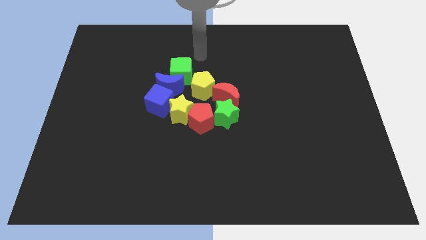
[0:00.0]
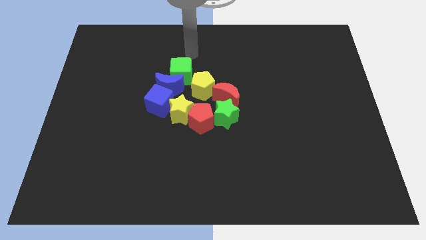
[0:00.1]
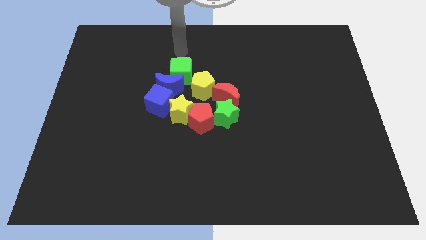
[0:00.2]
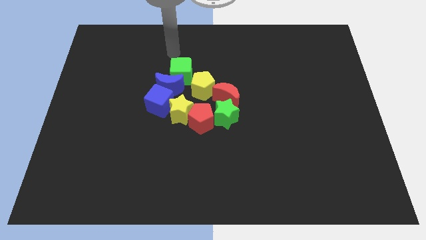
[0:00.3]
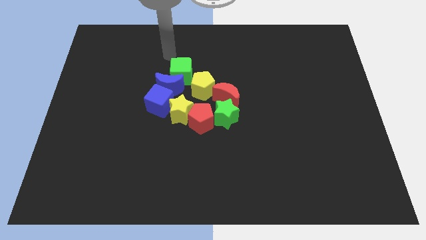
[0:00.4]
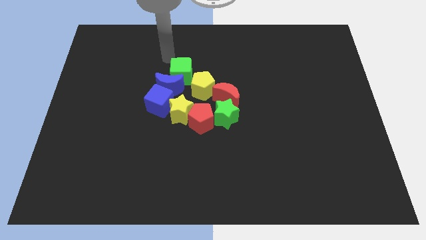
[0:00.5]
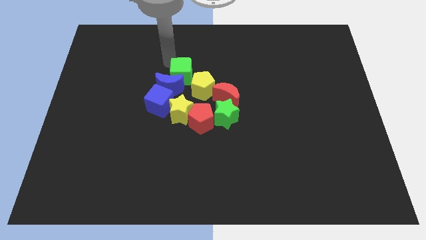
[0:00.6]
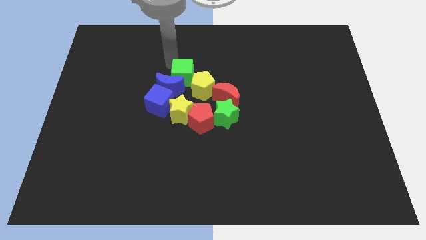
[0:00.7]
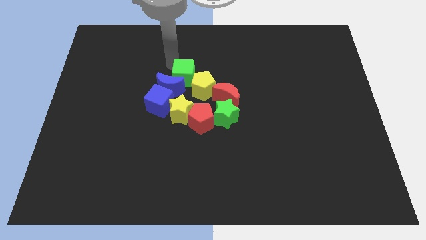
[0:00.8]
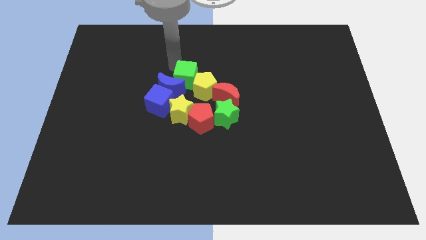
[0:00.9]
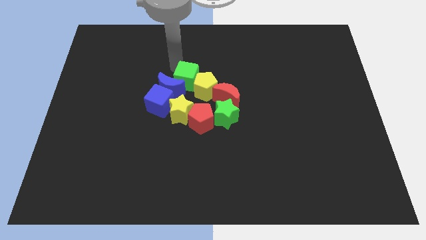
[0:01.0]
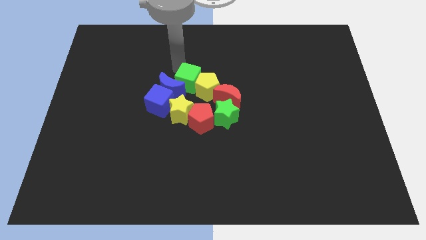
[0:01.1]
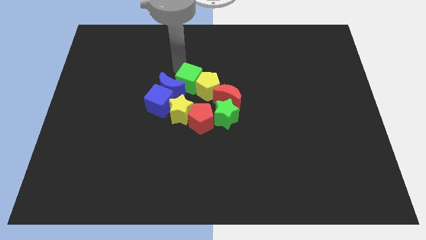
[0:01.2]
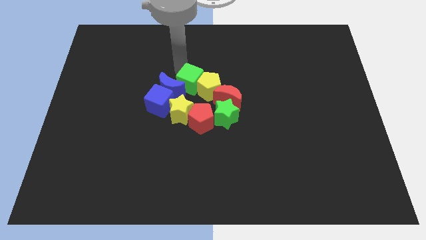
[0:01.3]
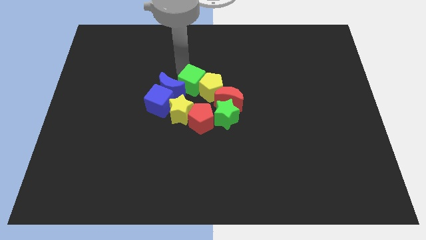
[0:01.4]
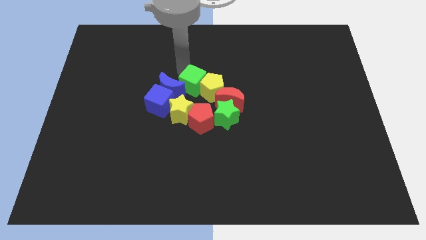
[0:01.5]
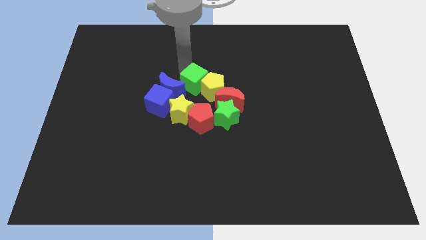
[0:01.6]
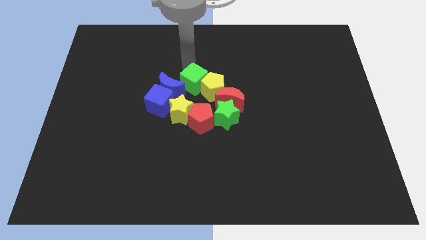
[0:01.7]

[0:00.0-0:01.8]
push the green cube into the group of objects

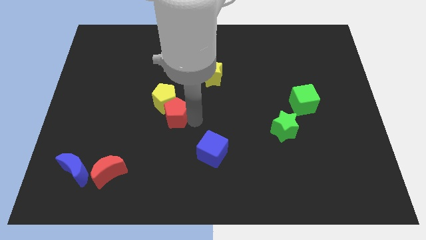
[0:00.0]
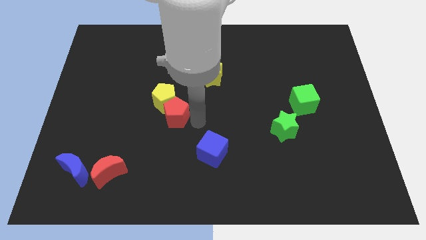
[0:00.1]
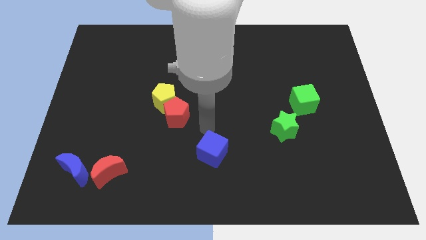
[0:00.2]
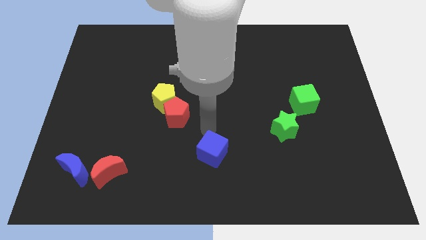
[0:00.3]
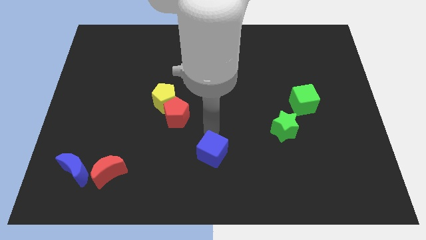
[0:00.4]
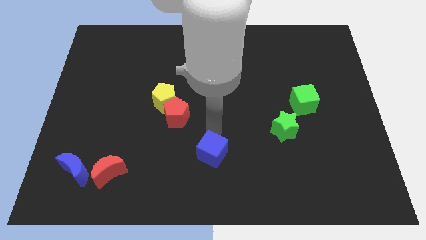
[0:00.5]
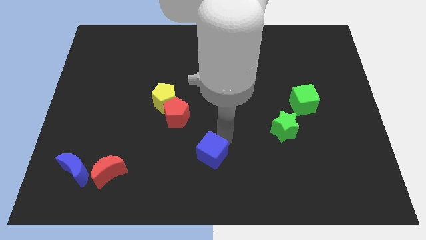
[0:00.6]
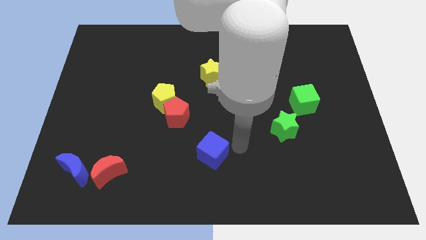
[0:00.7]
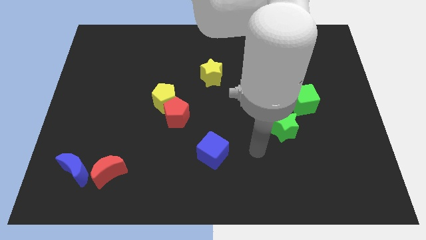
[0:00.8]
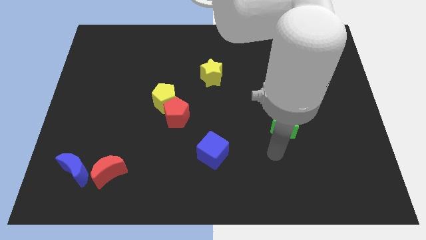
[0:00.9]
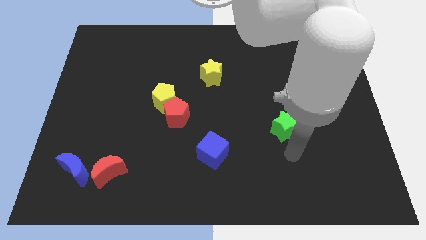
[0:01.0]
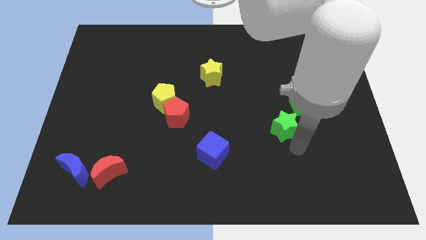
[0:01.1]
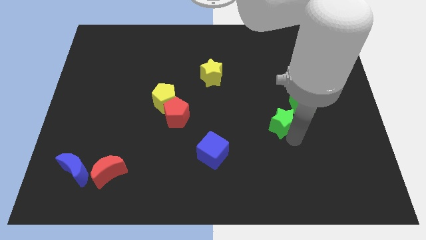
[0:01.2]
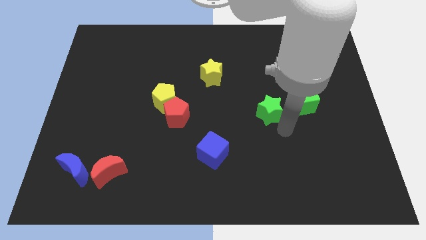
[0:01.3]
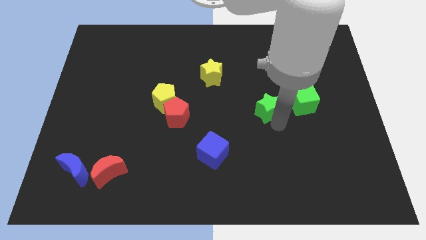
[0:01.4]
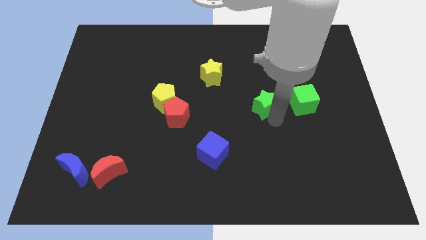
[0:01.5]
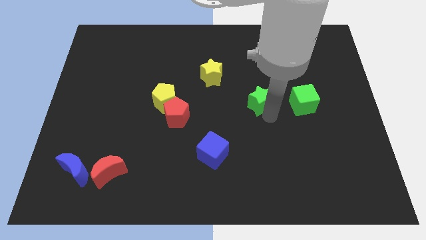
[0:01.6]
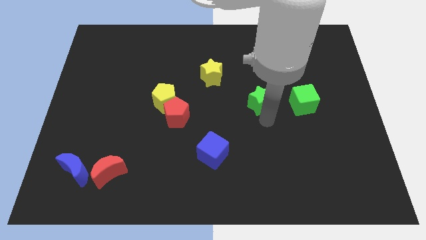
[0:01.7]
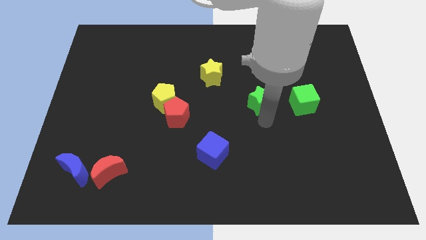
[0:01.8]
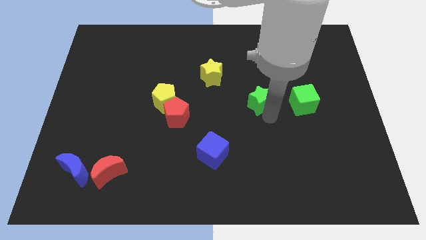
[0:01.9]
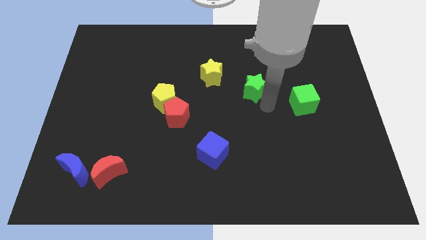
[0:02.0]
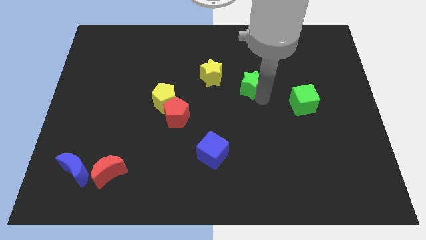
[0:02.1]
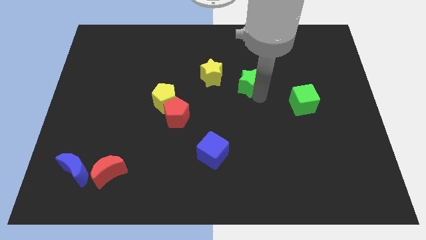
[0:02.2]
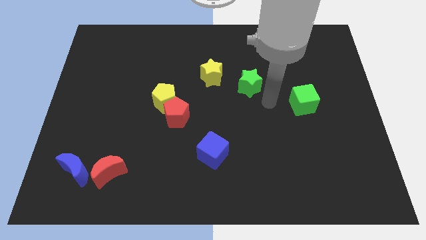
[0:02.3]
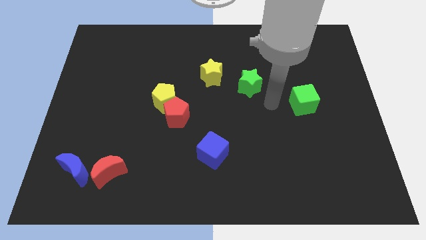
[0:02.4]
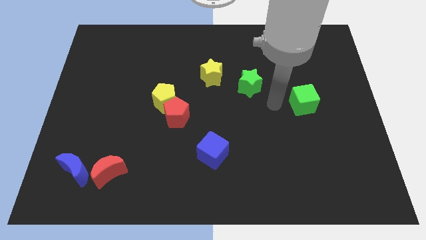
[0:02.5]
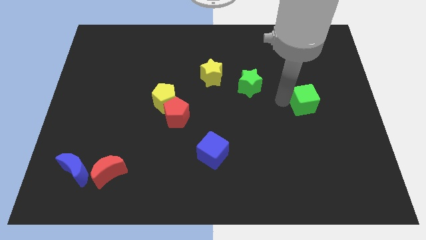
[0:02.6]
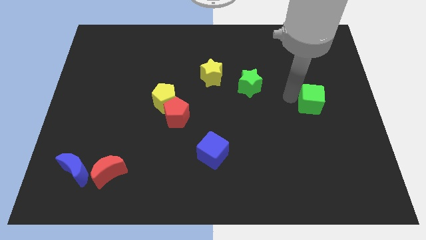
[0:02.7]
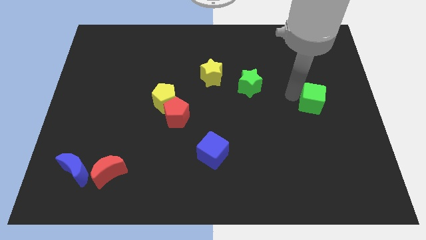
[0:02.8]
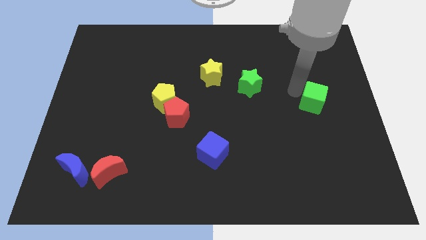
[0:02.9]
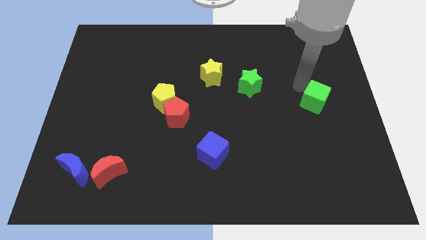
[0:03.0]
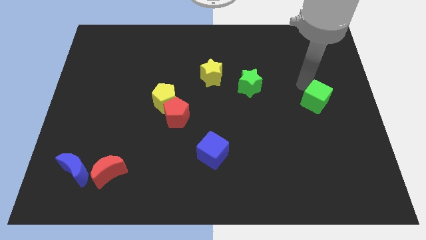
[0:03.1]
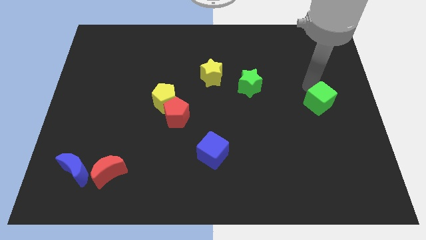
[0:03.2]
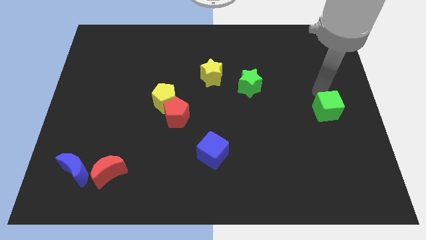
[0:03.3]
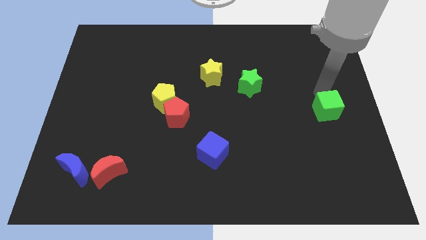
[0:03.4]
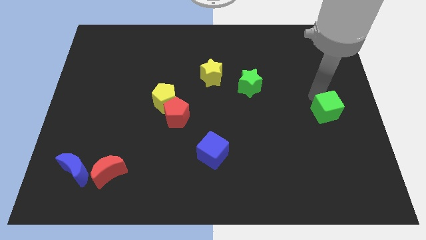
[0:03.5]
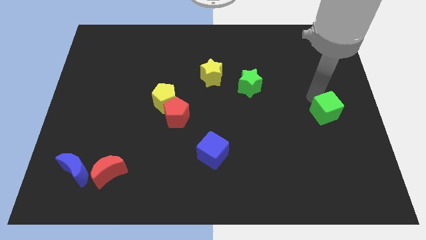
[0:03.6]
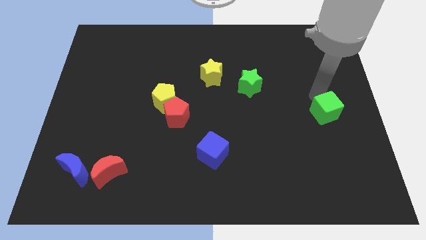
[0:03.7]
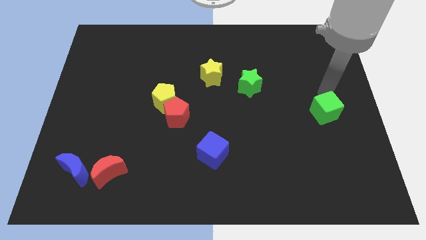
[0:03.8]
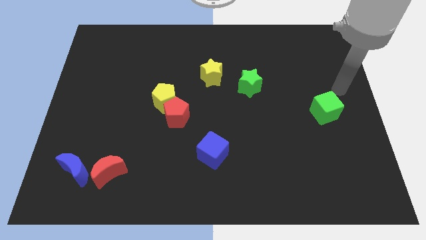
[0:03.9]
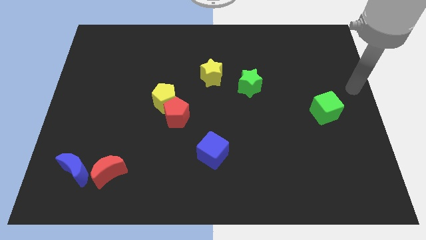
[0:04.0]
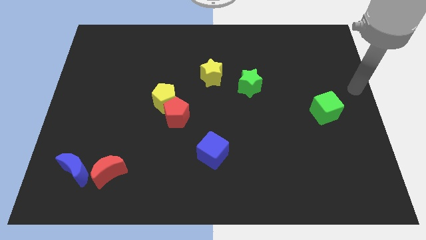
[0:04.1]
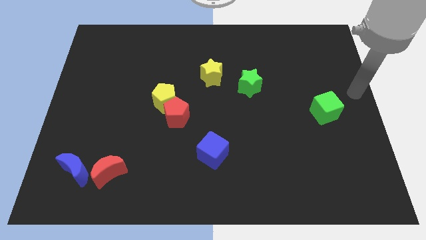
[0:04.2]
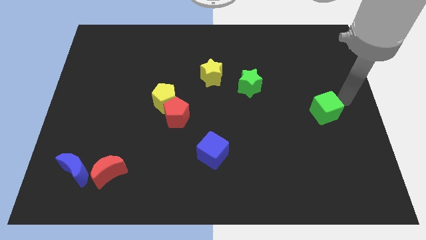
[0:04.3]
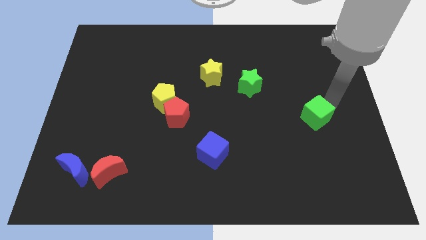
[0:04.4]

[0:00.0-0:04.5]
push the green cube horizontally at the right side of the red pentagon

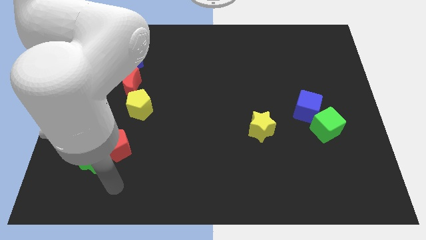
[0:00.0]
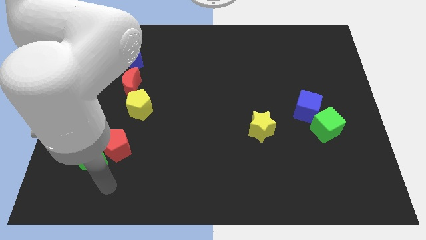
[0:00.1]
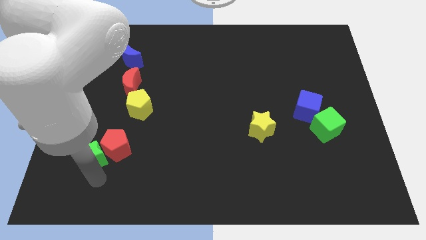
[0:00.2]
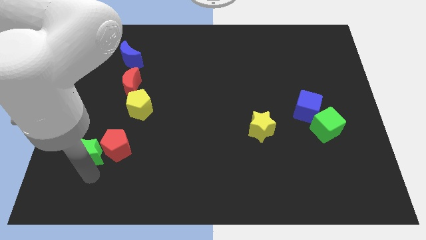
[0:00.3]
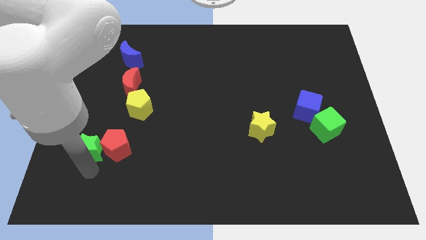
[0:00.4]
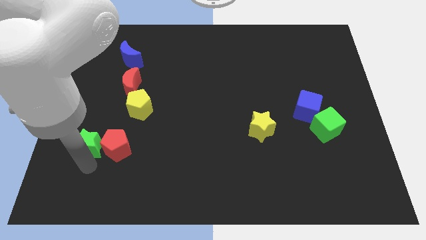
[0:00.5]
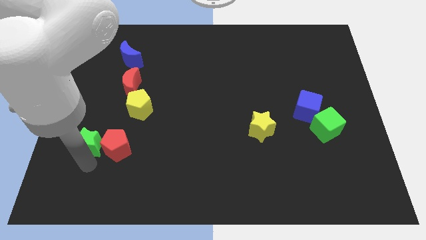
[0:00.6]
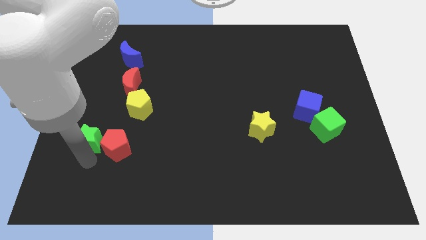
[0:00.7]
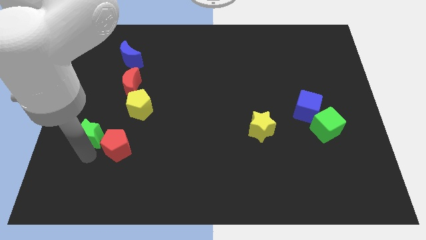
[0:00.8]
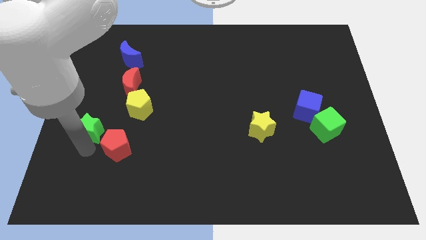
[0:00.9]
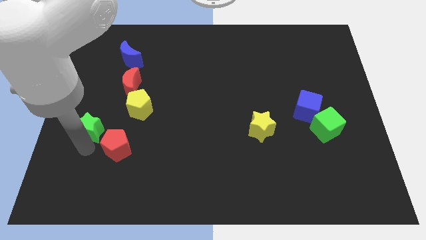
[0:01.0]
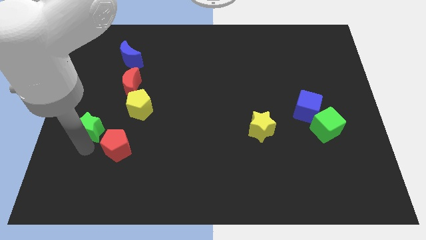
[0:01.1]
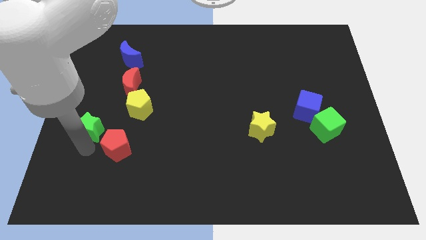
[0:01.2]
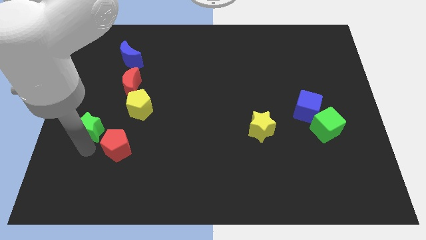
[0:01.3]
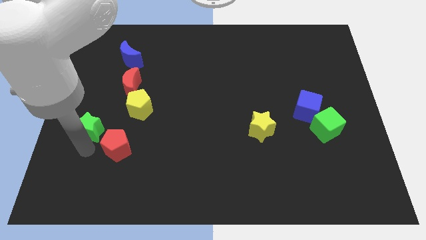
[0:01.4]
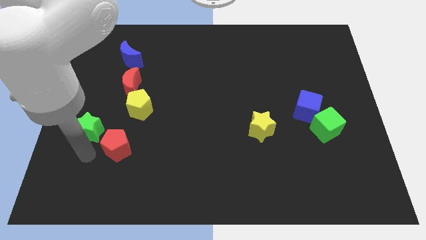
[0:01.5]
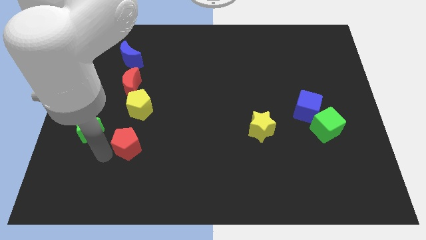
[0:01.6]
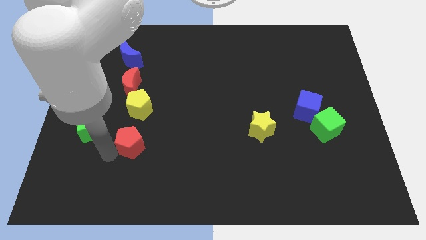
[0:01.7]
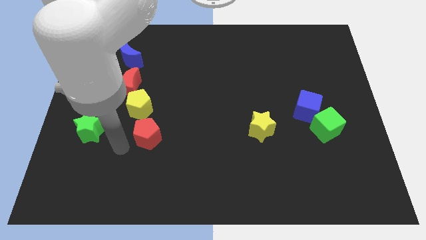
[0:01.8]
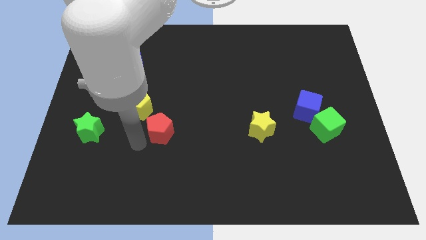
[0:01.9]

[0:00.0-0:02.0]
separate red pentagon from green star

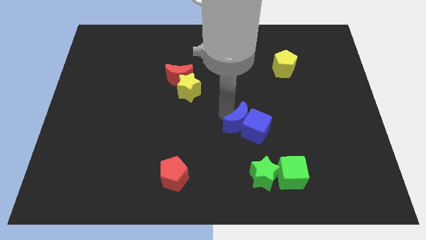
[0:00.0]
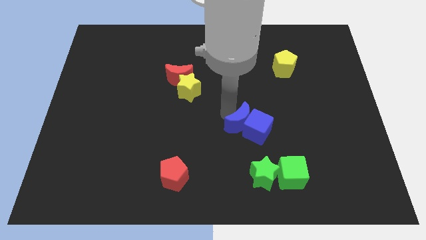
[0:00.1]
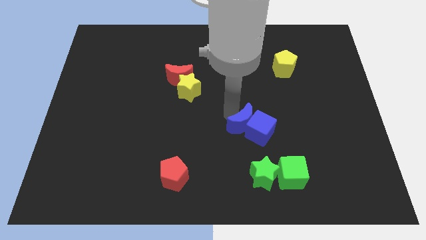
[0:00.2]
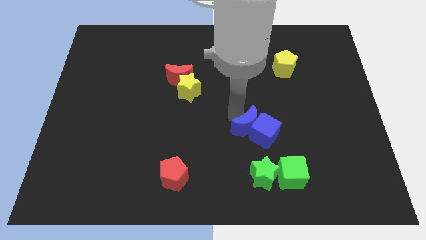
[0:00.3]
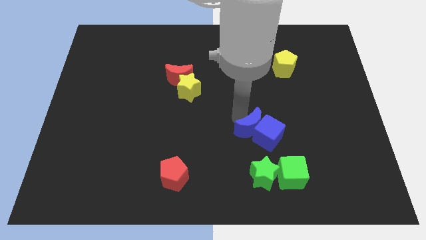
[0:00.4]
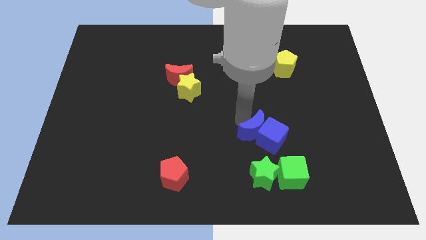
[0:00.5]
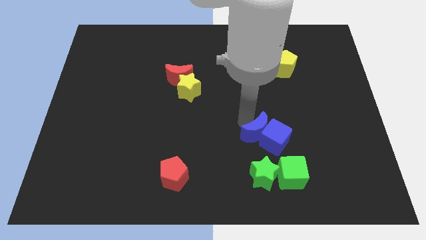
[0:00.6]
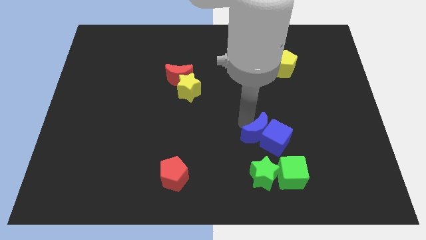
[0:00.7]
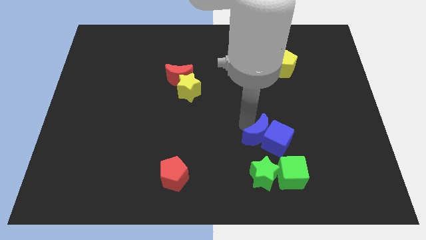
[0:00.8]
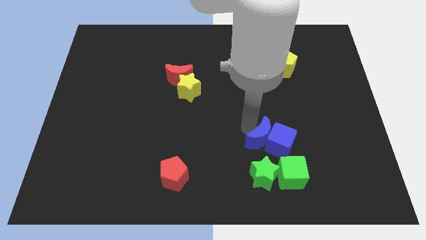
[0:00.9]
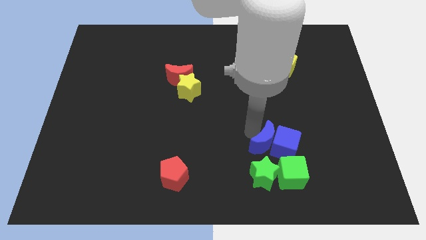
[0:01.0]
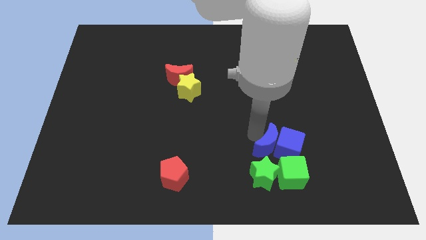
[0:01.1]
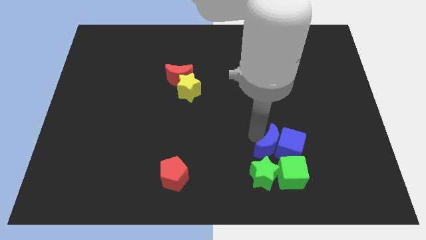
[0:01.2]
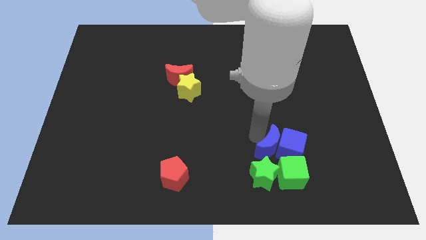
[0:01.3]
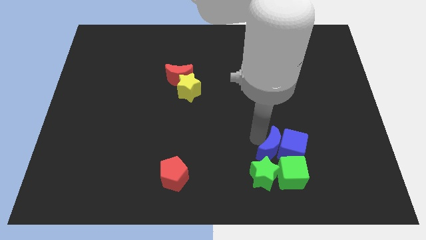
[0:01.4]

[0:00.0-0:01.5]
push blue blocks on top of green blocks
